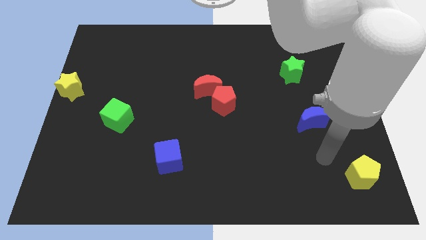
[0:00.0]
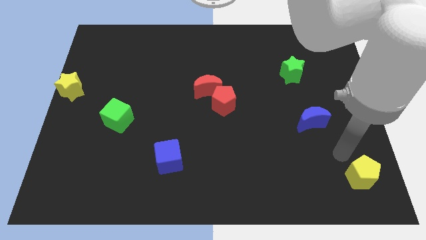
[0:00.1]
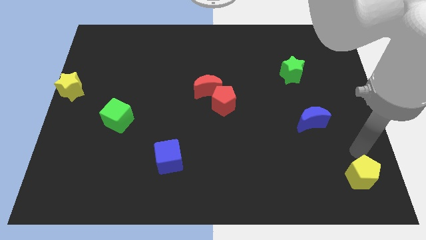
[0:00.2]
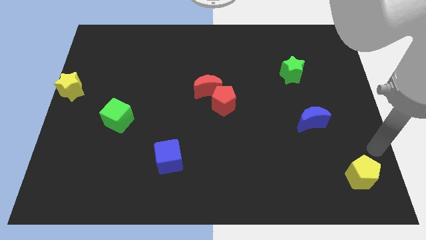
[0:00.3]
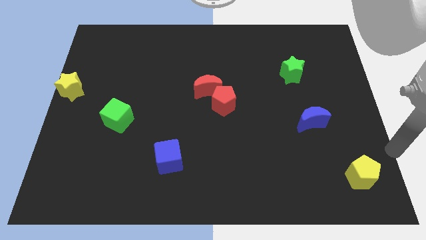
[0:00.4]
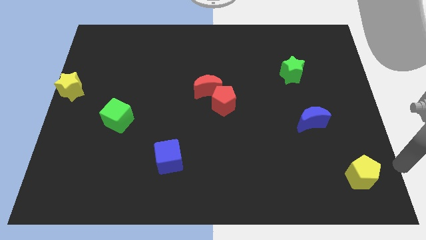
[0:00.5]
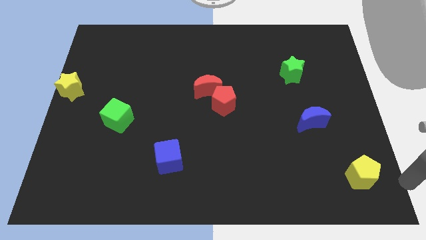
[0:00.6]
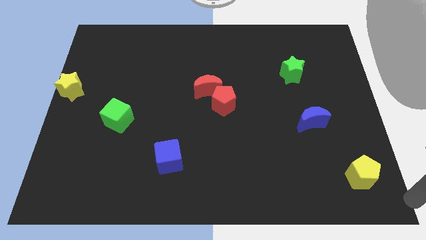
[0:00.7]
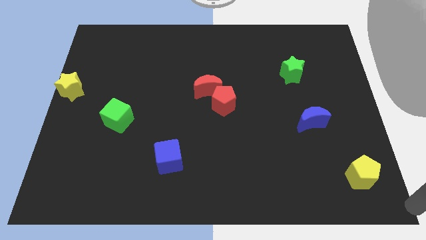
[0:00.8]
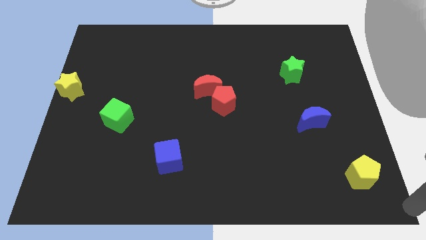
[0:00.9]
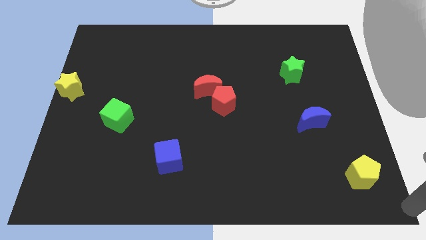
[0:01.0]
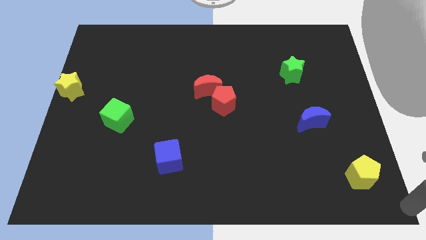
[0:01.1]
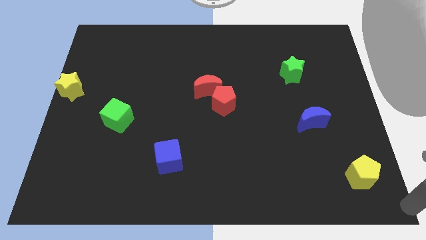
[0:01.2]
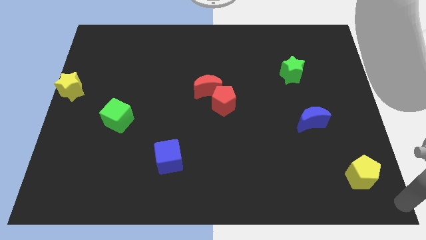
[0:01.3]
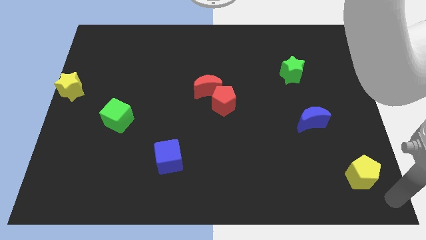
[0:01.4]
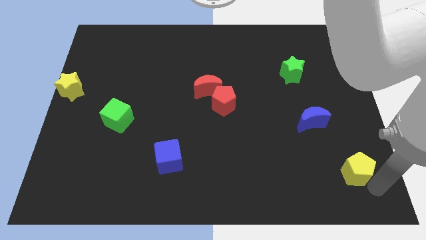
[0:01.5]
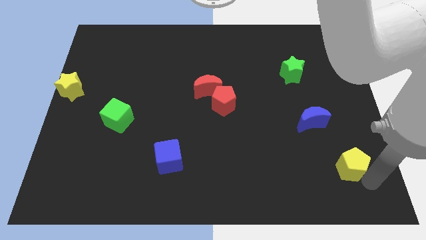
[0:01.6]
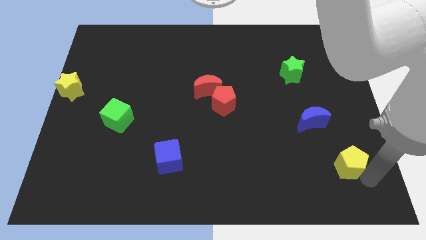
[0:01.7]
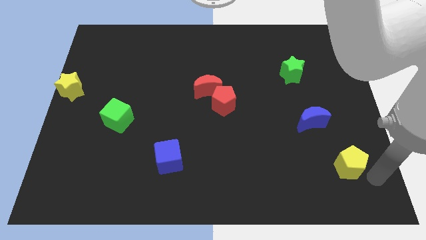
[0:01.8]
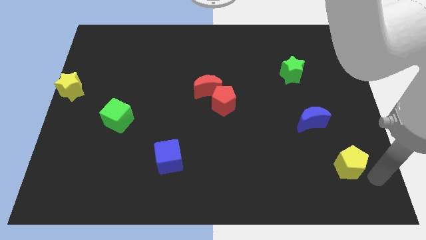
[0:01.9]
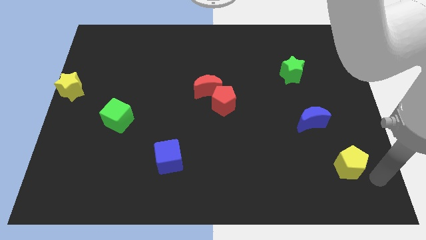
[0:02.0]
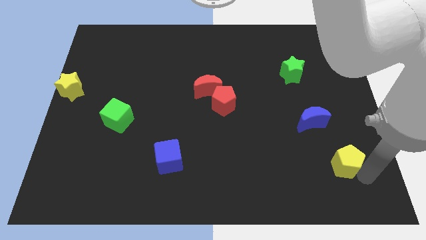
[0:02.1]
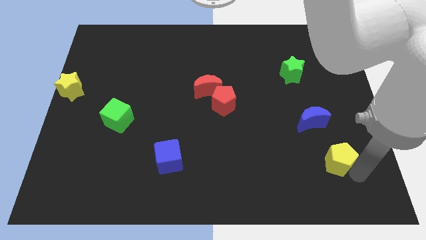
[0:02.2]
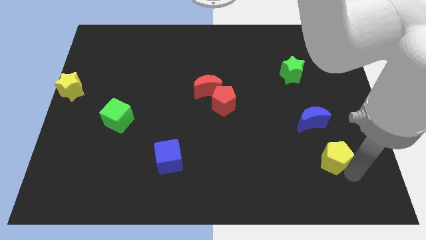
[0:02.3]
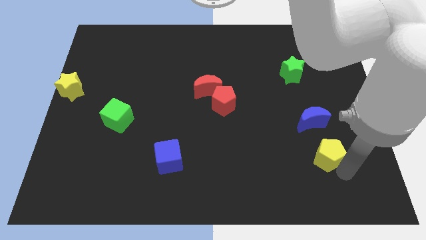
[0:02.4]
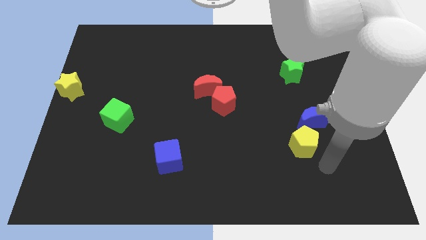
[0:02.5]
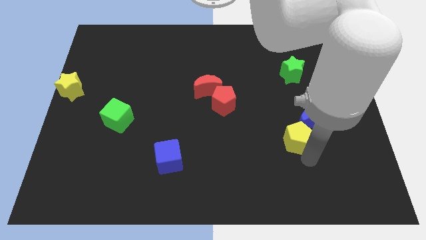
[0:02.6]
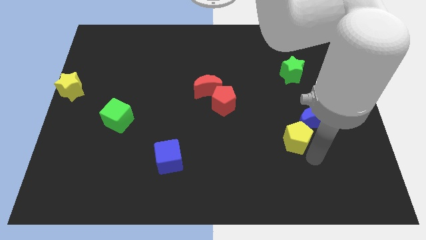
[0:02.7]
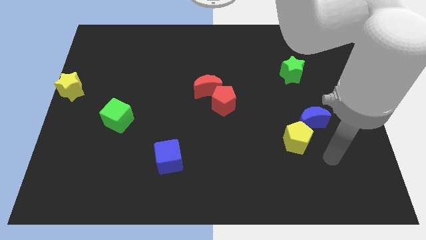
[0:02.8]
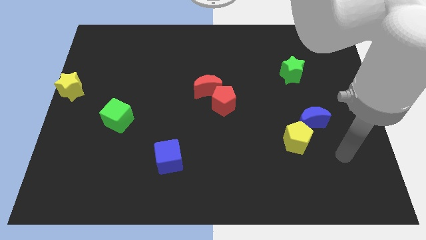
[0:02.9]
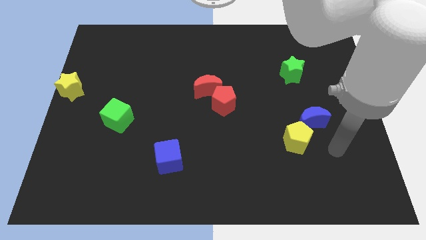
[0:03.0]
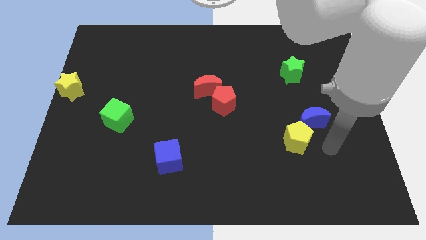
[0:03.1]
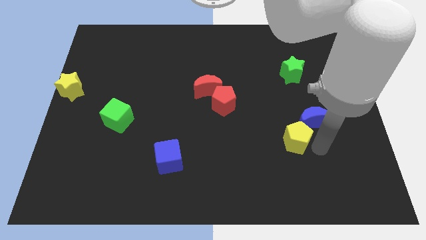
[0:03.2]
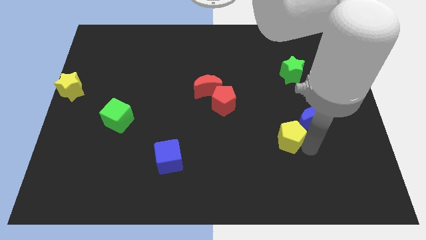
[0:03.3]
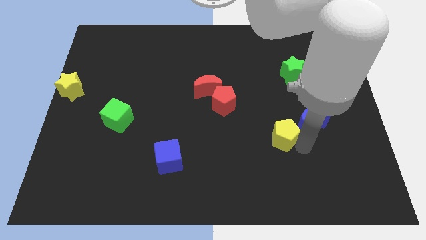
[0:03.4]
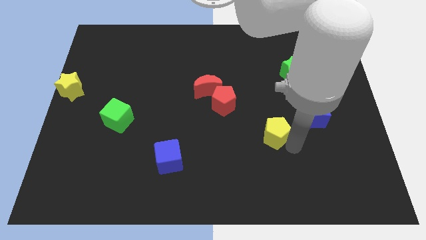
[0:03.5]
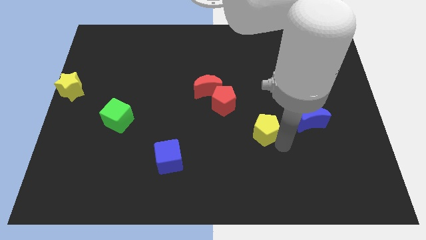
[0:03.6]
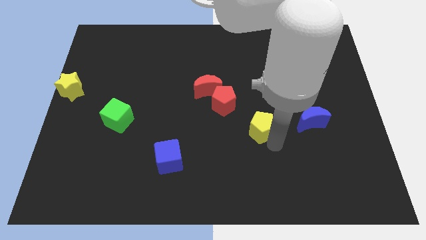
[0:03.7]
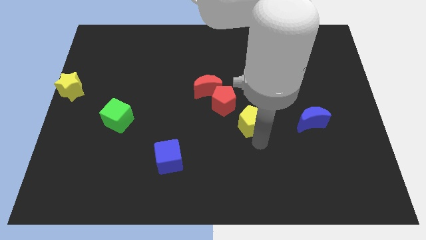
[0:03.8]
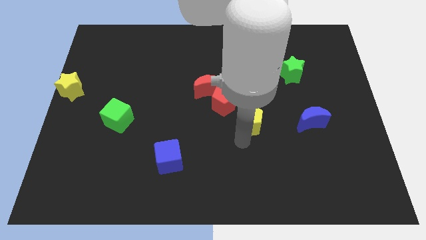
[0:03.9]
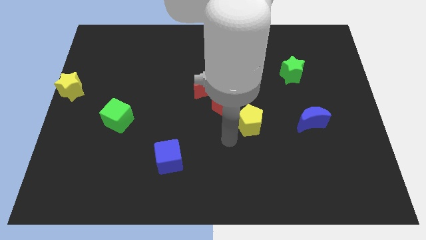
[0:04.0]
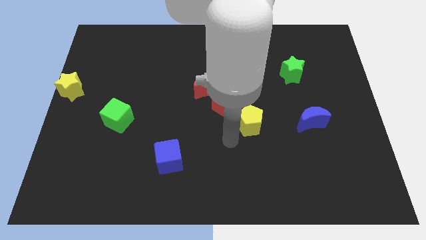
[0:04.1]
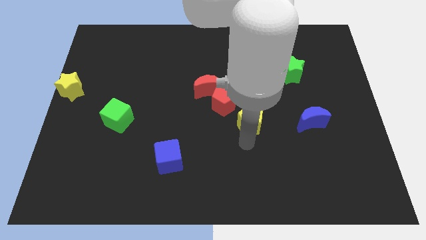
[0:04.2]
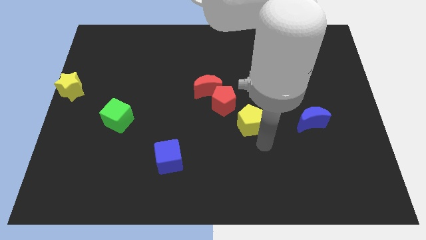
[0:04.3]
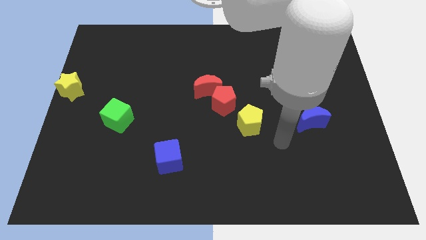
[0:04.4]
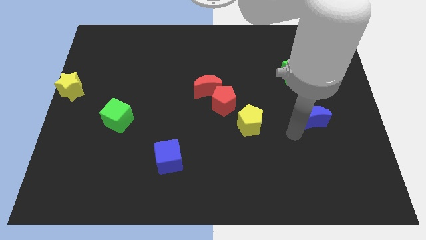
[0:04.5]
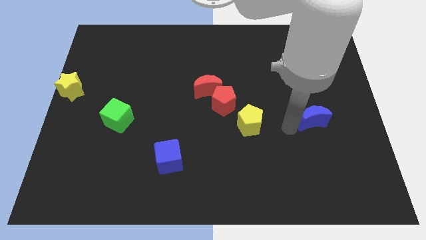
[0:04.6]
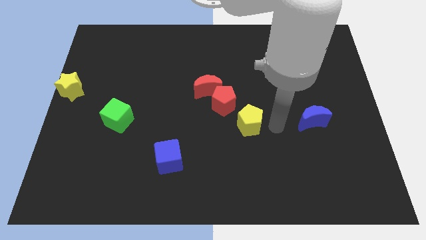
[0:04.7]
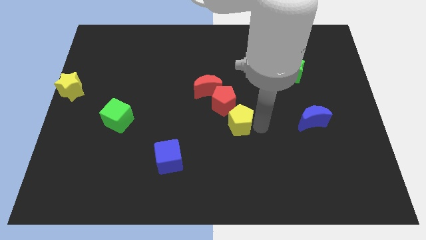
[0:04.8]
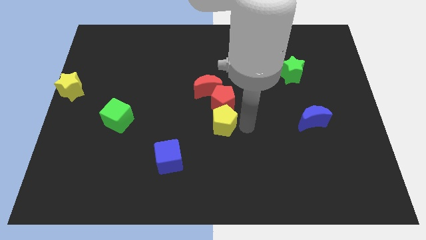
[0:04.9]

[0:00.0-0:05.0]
place the yellow pentagon to the bottom side of the red pentgaon

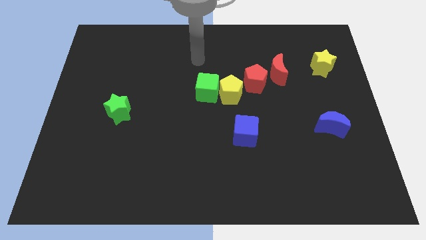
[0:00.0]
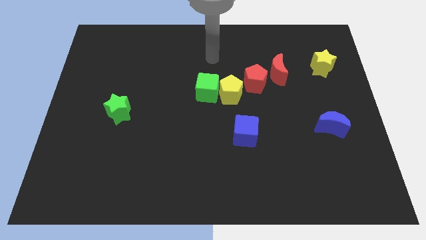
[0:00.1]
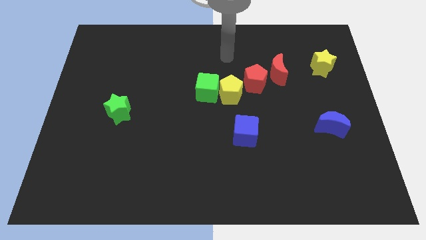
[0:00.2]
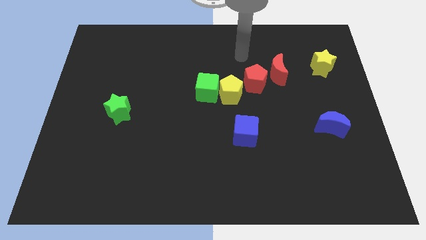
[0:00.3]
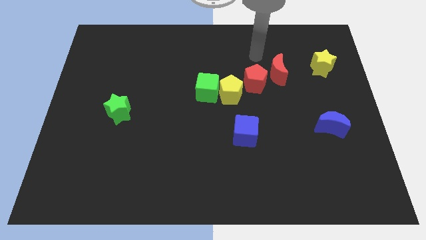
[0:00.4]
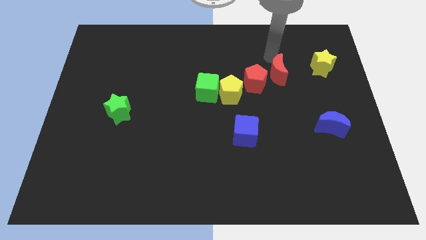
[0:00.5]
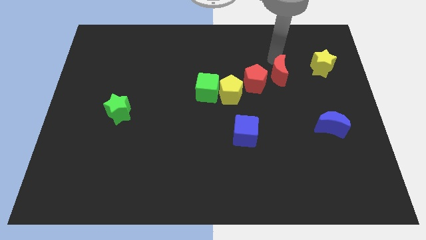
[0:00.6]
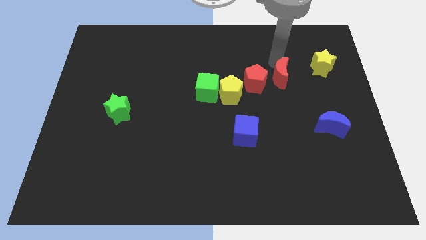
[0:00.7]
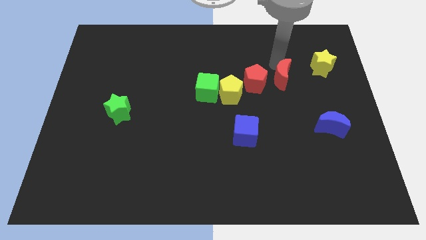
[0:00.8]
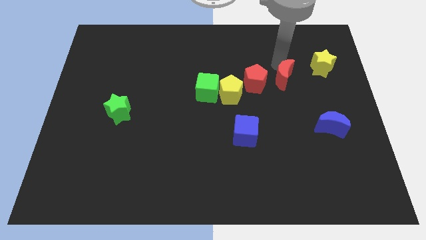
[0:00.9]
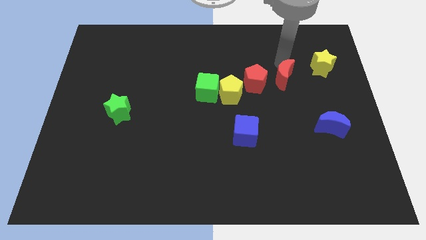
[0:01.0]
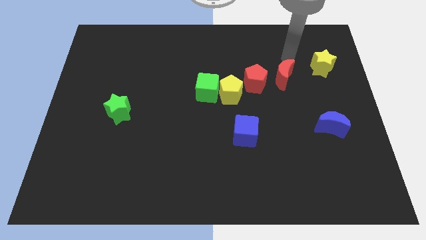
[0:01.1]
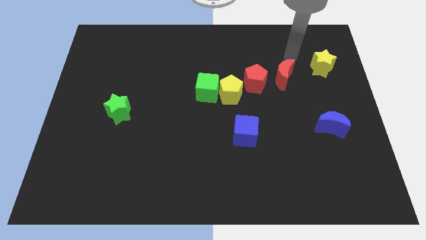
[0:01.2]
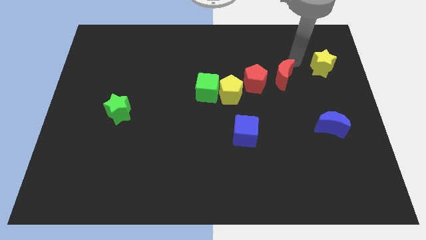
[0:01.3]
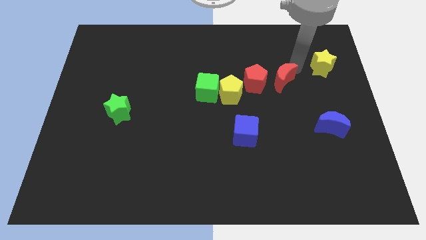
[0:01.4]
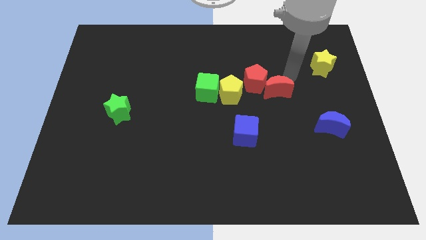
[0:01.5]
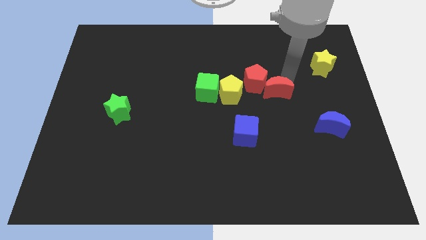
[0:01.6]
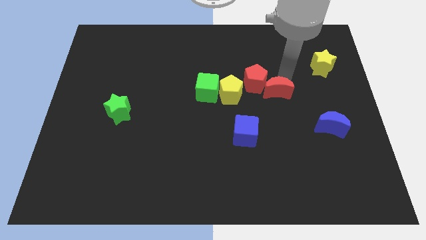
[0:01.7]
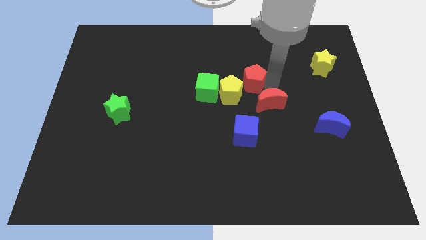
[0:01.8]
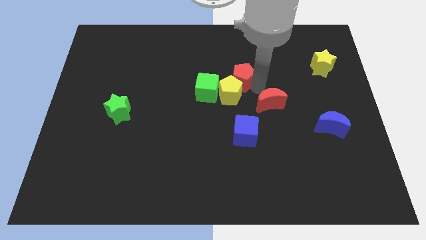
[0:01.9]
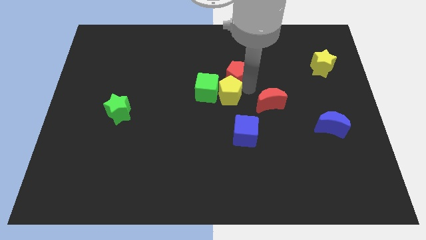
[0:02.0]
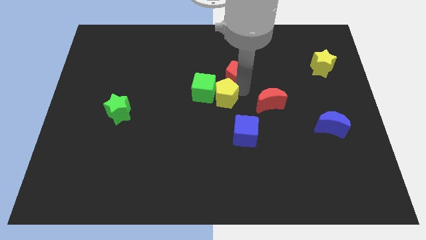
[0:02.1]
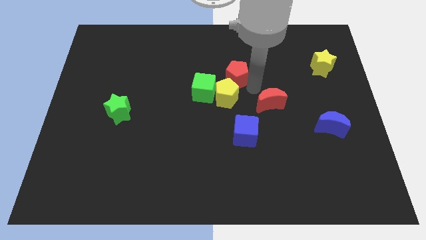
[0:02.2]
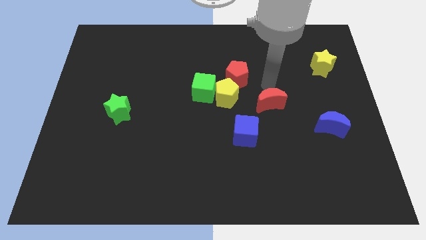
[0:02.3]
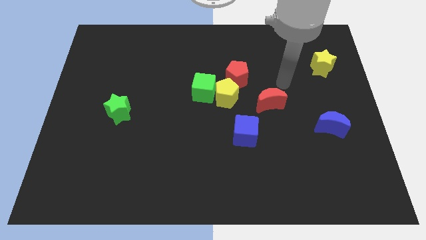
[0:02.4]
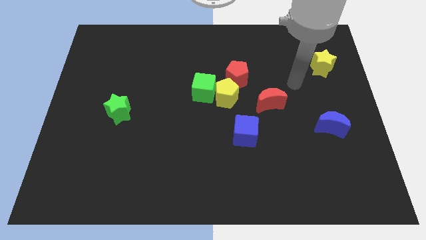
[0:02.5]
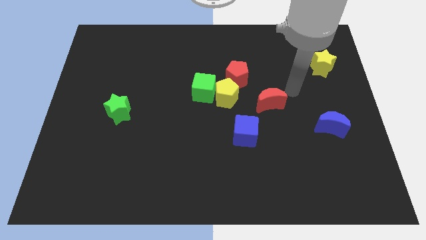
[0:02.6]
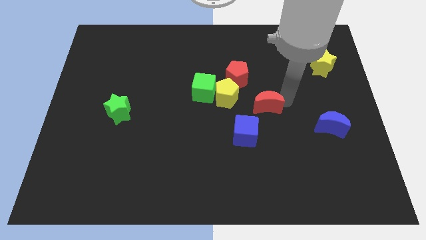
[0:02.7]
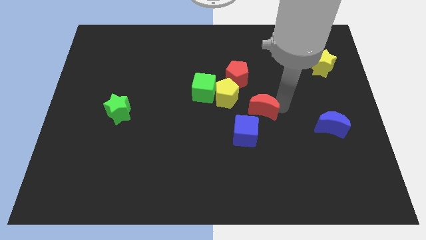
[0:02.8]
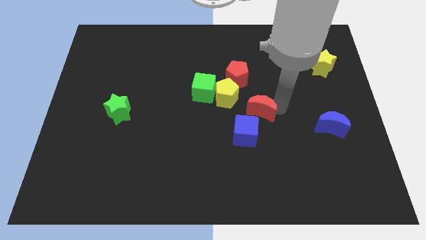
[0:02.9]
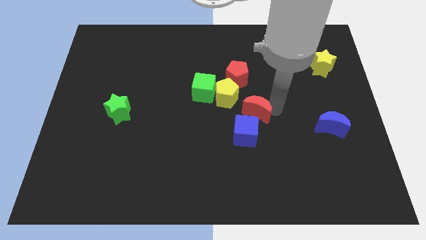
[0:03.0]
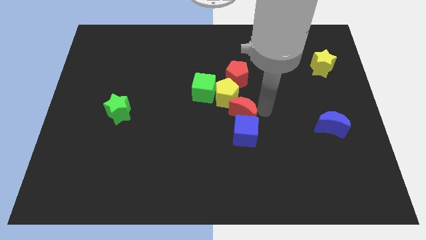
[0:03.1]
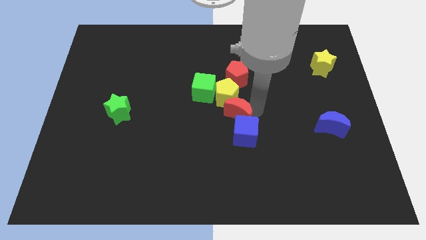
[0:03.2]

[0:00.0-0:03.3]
place the red moon above the blue cube

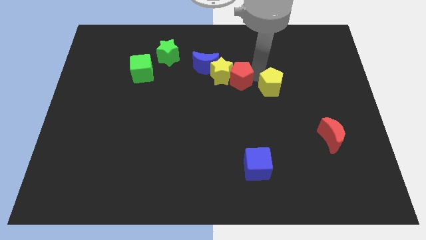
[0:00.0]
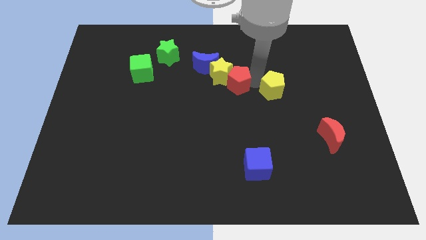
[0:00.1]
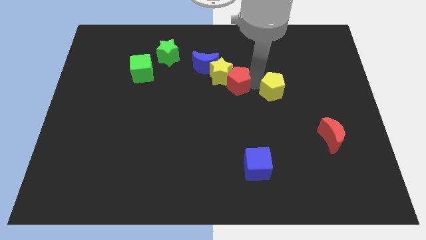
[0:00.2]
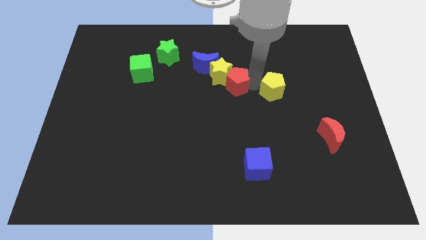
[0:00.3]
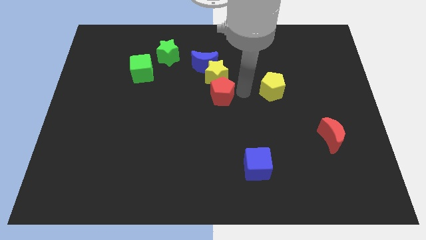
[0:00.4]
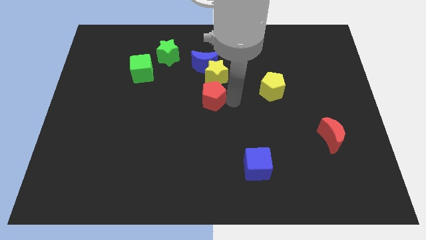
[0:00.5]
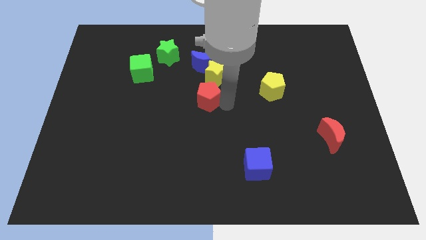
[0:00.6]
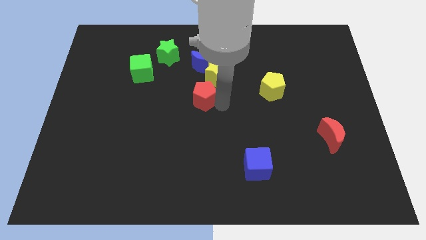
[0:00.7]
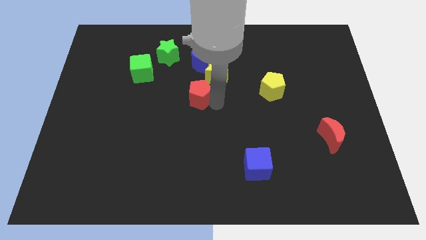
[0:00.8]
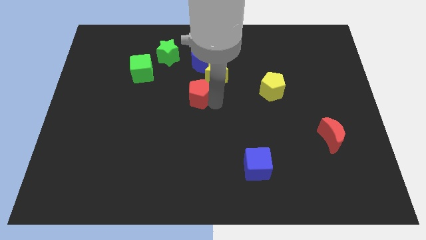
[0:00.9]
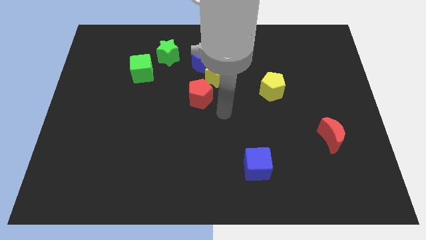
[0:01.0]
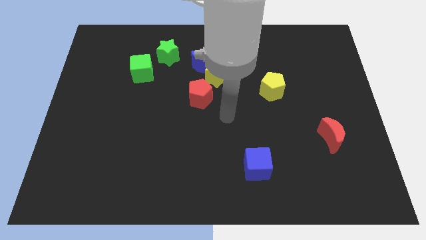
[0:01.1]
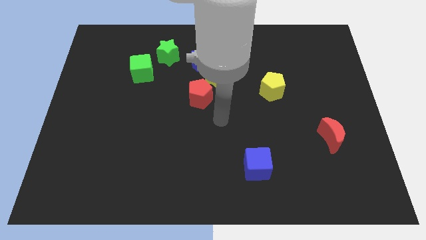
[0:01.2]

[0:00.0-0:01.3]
move the red pentagon to the bottom left of the yellow star
